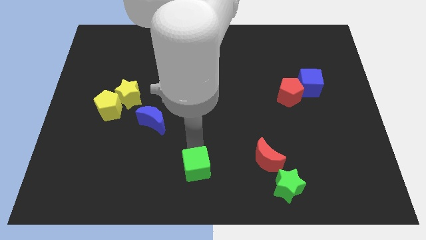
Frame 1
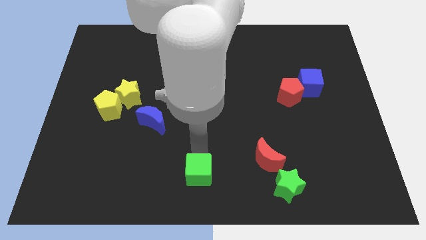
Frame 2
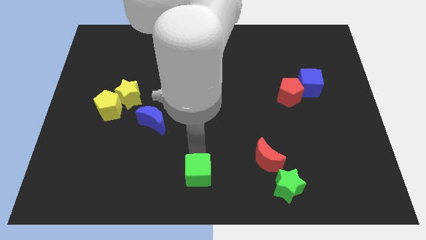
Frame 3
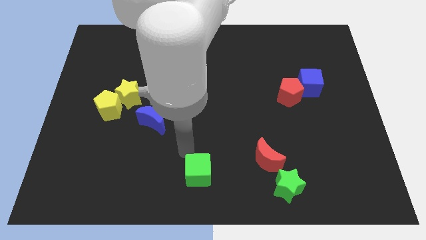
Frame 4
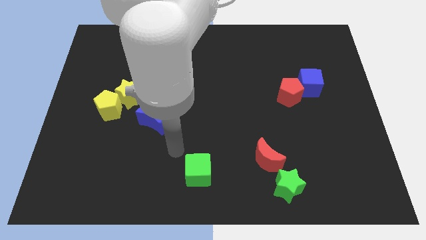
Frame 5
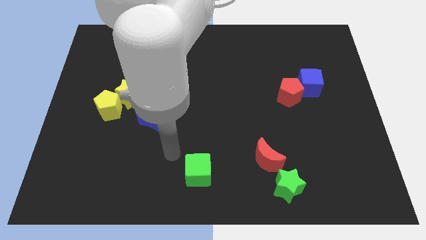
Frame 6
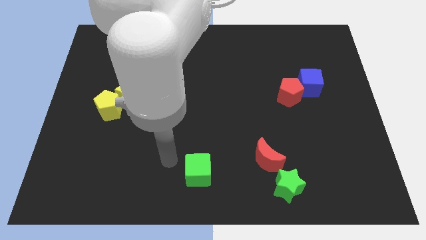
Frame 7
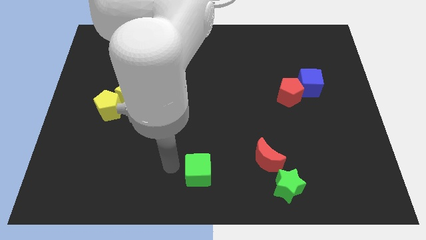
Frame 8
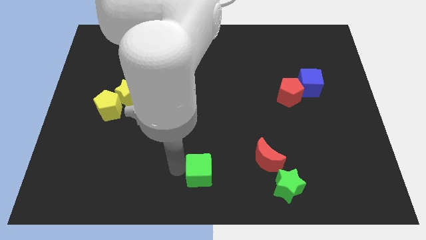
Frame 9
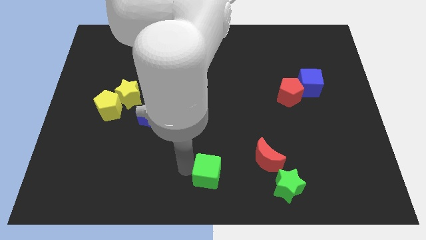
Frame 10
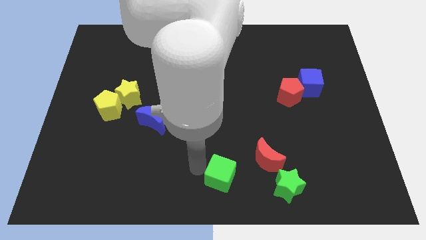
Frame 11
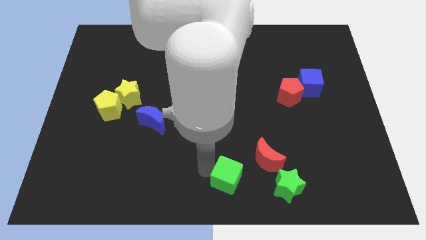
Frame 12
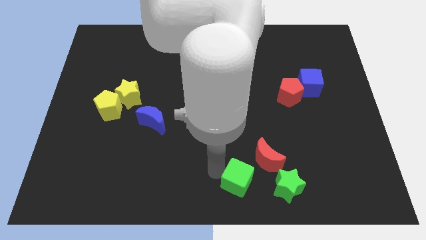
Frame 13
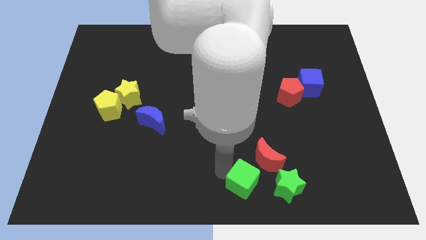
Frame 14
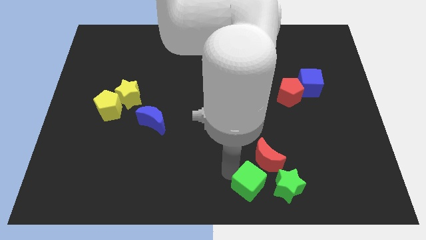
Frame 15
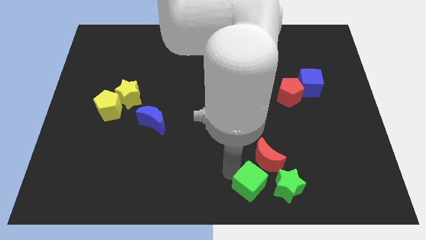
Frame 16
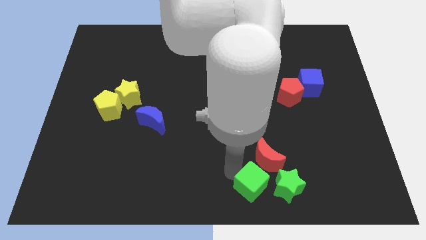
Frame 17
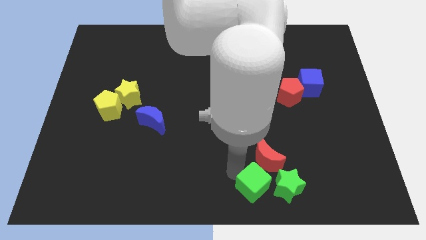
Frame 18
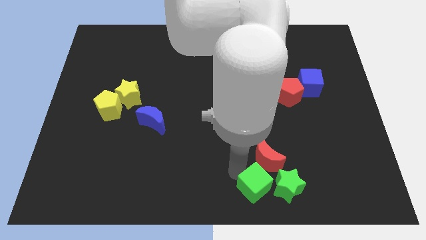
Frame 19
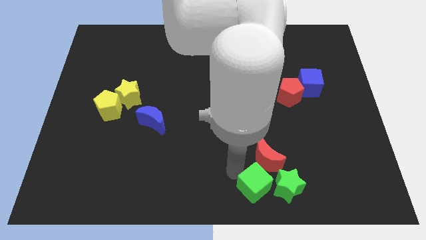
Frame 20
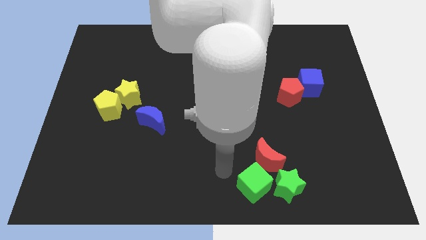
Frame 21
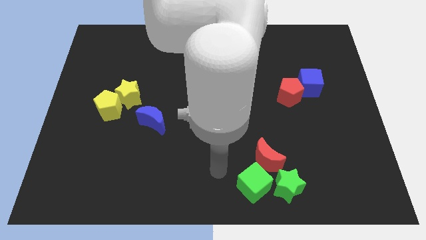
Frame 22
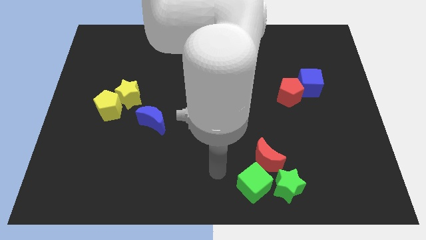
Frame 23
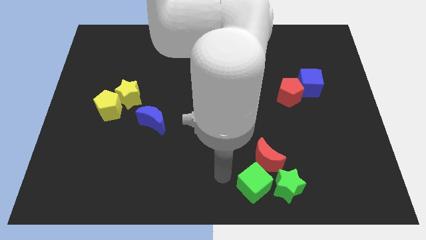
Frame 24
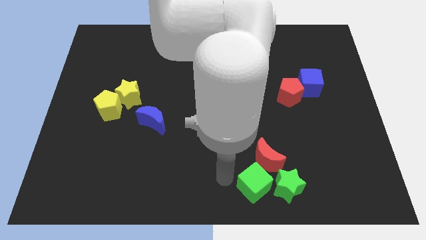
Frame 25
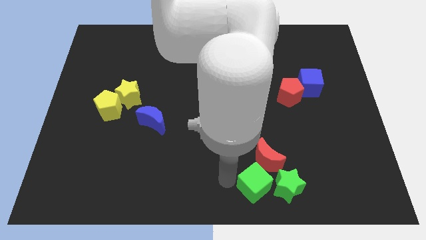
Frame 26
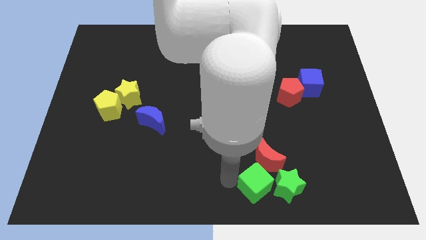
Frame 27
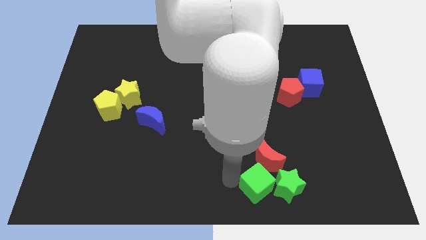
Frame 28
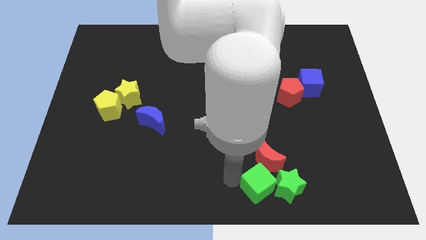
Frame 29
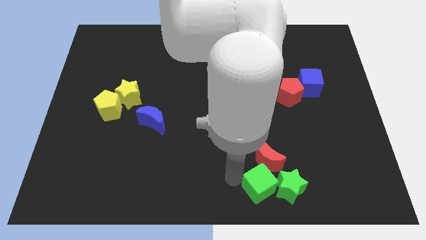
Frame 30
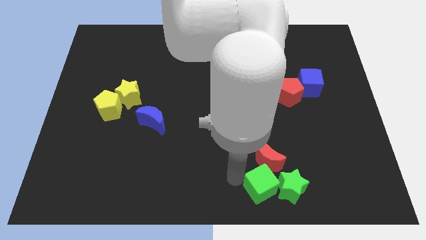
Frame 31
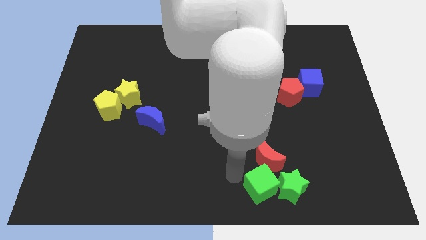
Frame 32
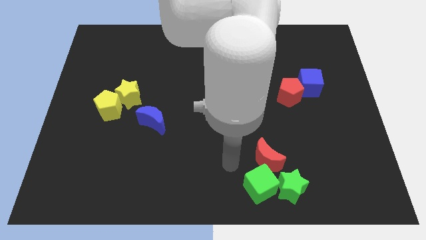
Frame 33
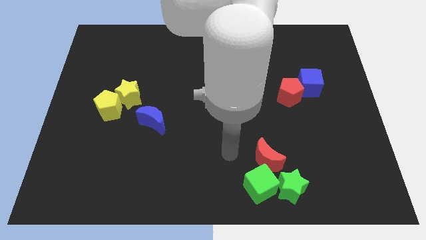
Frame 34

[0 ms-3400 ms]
place the green cube to the bottom of the red crescent

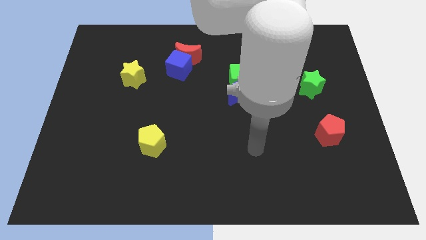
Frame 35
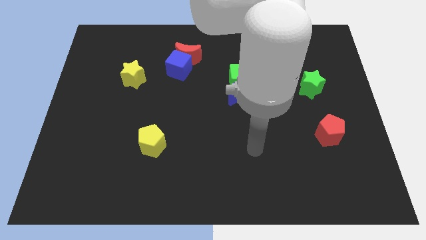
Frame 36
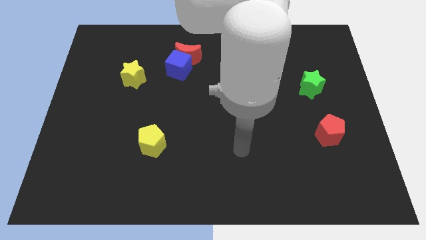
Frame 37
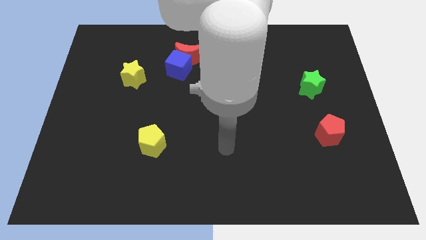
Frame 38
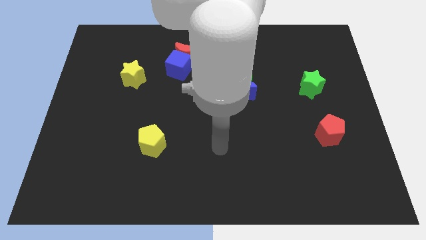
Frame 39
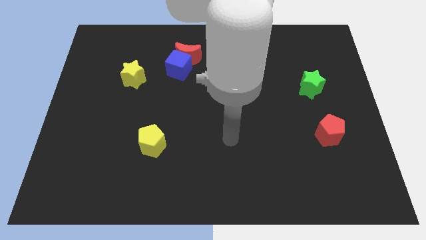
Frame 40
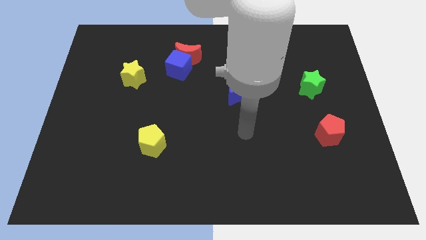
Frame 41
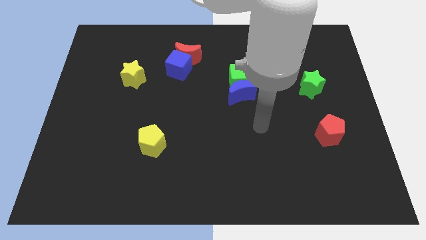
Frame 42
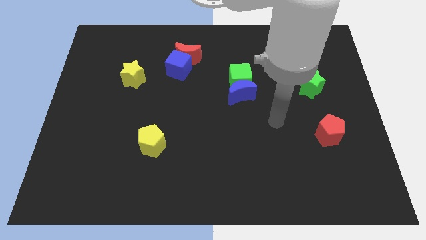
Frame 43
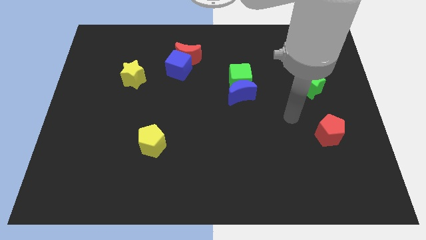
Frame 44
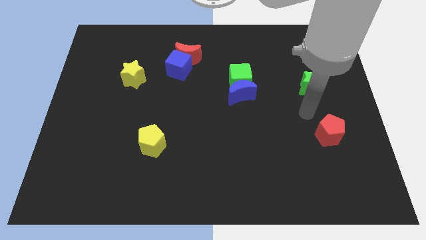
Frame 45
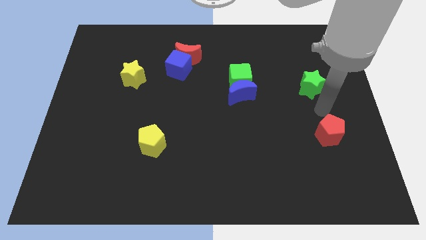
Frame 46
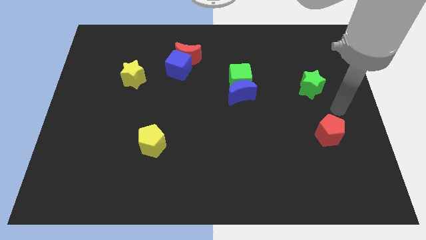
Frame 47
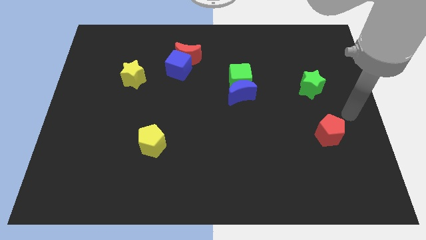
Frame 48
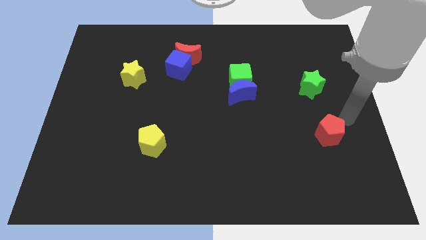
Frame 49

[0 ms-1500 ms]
point the arm to the top right of the red pentagon

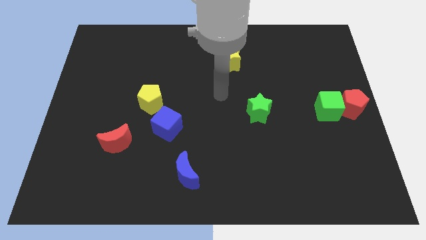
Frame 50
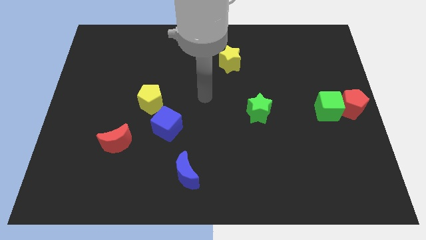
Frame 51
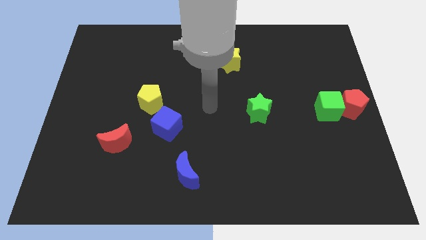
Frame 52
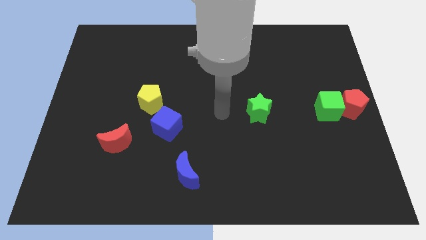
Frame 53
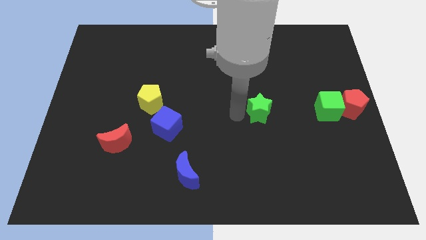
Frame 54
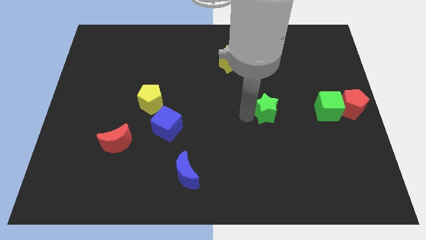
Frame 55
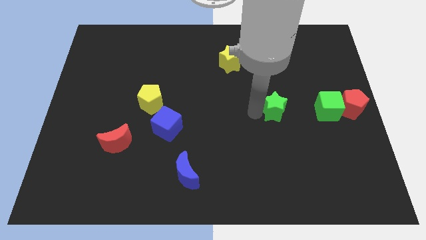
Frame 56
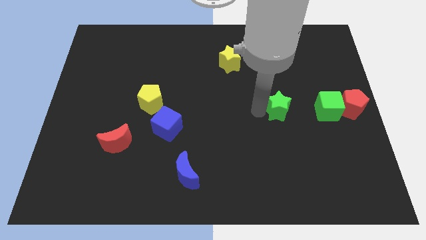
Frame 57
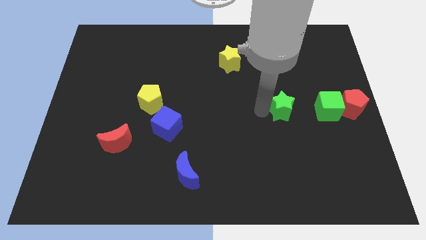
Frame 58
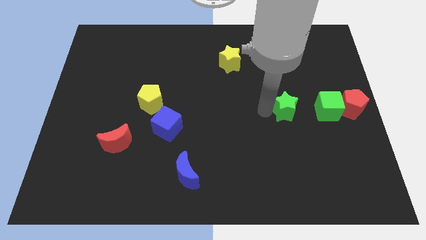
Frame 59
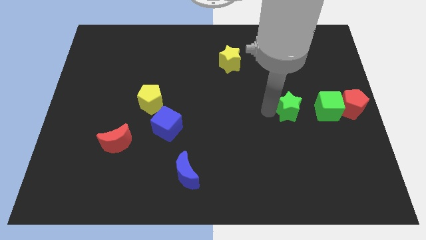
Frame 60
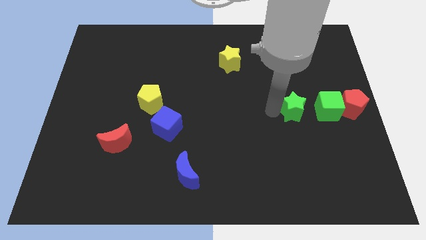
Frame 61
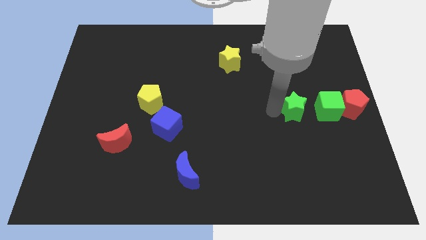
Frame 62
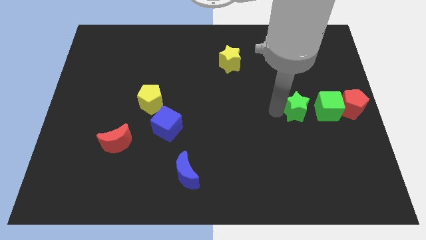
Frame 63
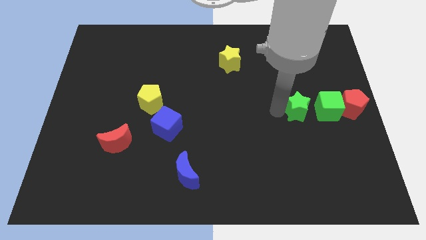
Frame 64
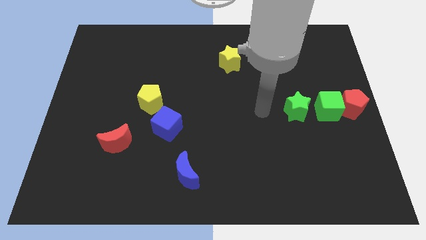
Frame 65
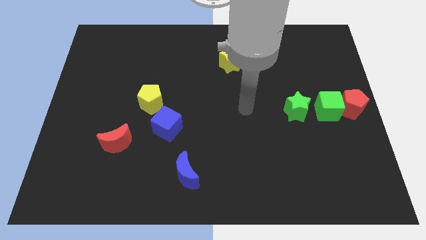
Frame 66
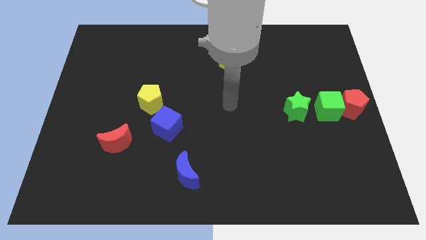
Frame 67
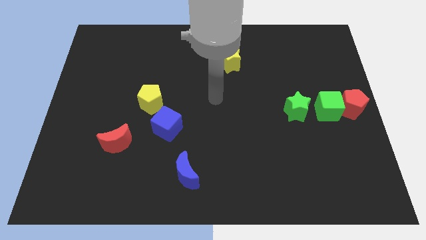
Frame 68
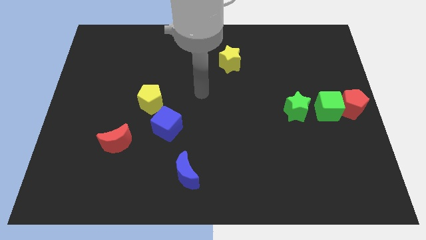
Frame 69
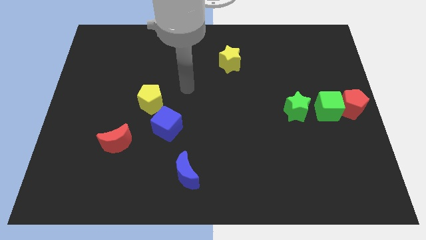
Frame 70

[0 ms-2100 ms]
push the green star towards the green cube

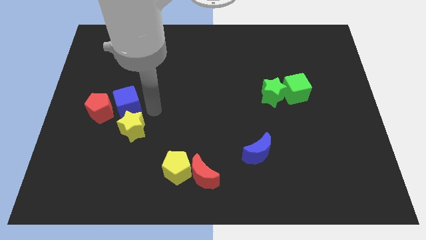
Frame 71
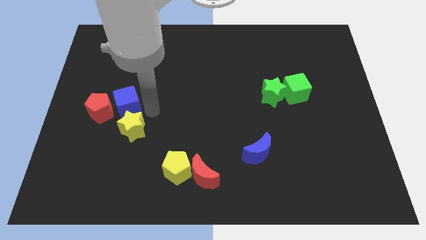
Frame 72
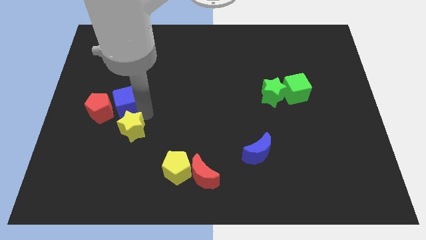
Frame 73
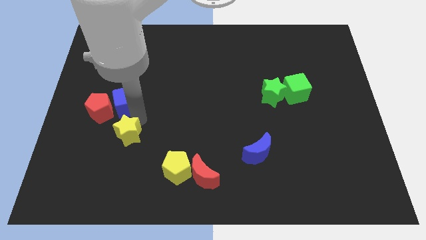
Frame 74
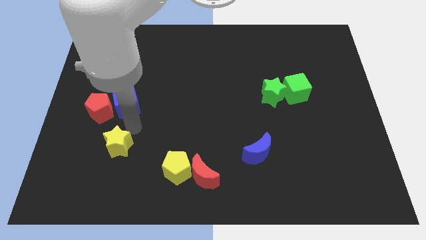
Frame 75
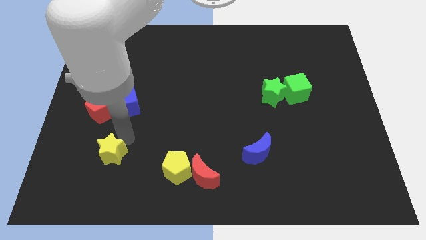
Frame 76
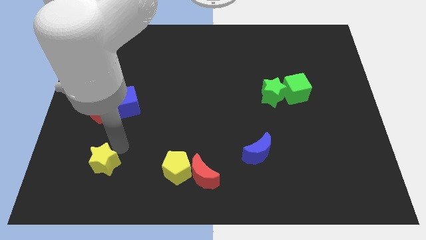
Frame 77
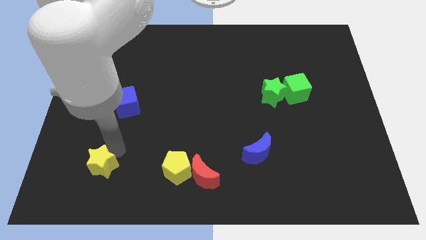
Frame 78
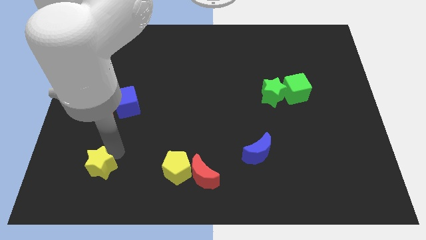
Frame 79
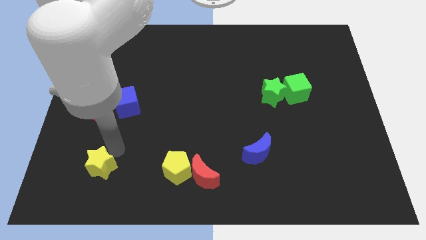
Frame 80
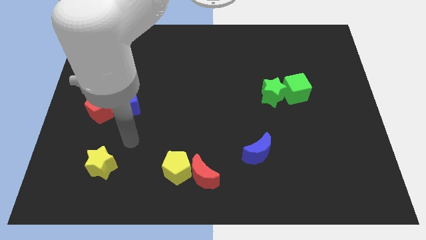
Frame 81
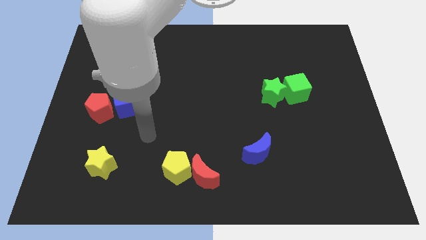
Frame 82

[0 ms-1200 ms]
move the yellow star to the horizontal left side of the yellow pentagon

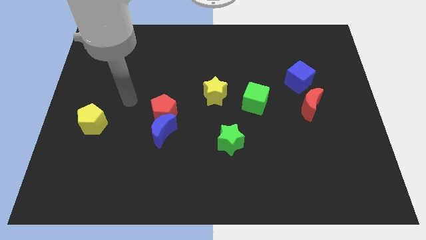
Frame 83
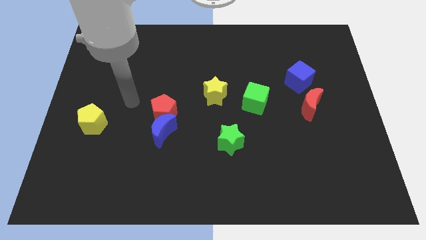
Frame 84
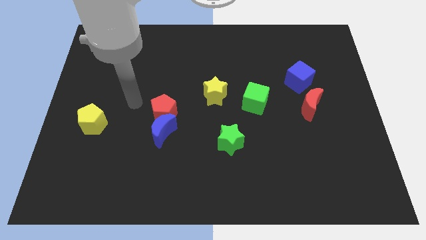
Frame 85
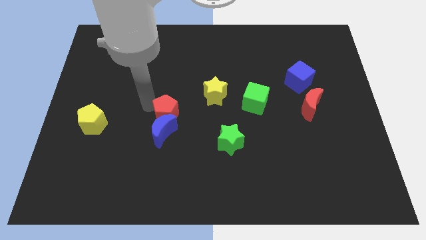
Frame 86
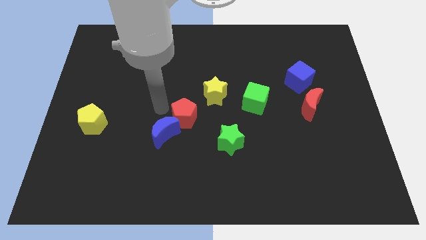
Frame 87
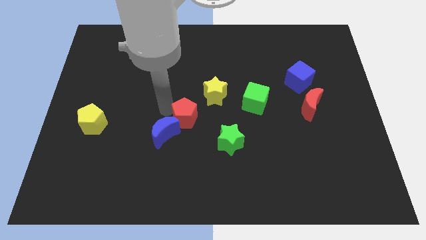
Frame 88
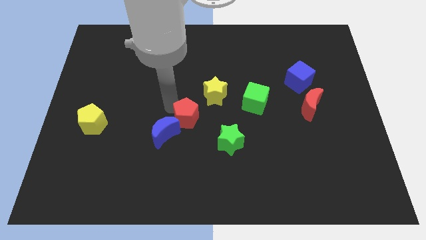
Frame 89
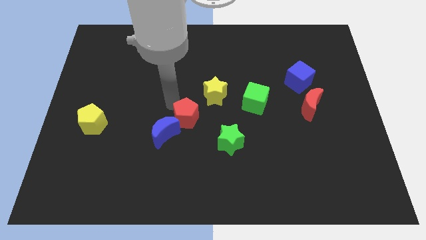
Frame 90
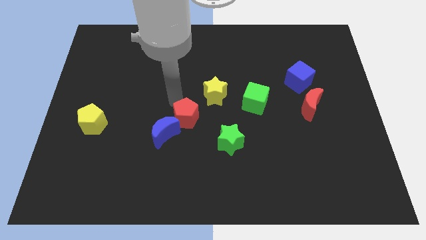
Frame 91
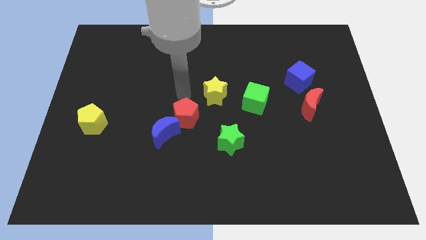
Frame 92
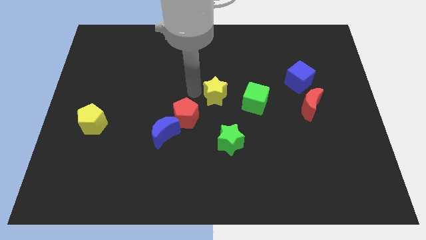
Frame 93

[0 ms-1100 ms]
slide red pentagon slightly to the right
